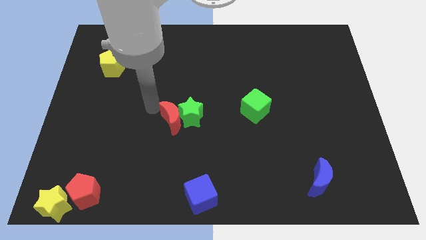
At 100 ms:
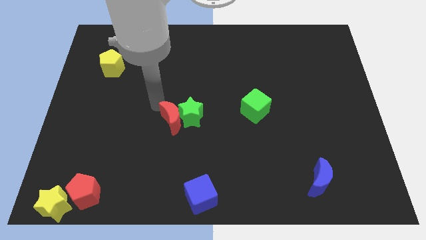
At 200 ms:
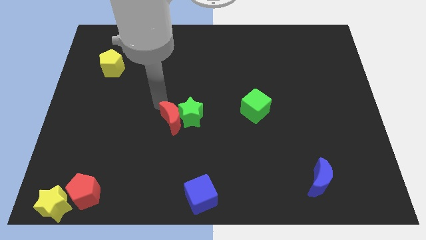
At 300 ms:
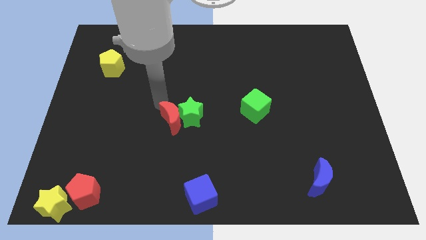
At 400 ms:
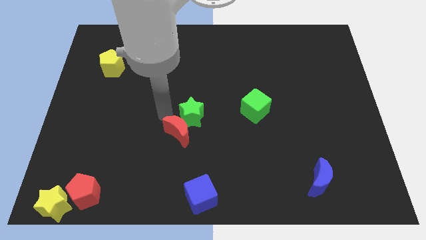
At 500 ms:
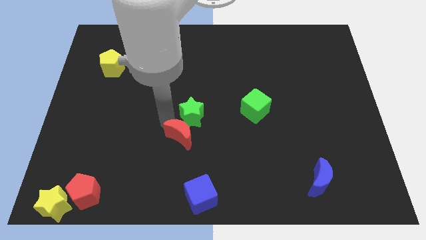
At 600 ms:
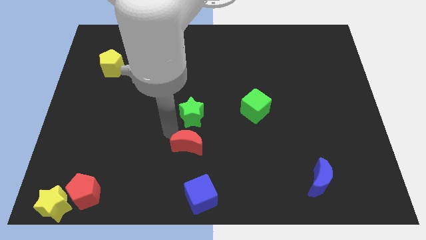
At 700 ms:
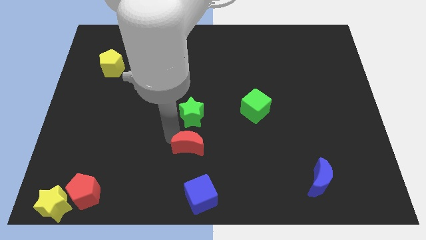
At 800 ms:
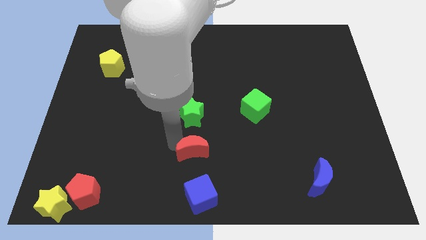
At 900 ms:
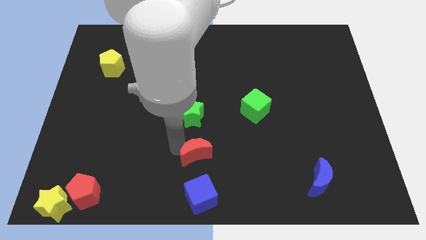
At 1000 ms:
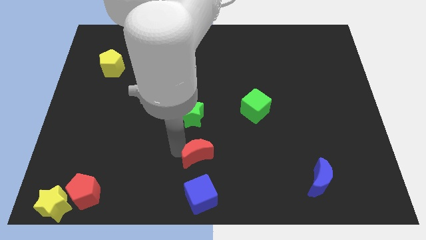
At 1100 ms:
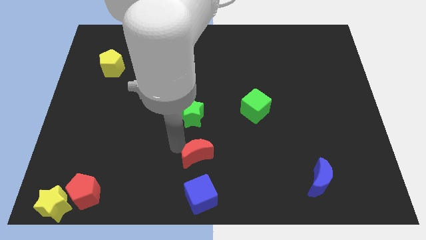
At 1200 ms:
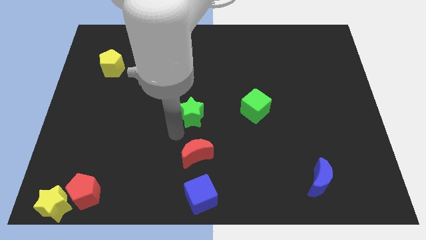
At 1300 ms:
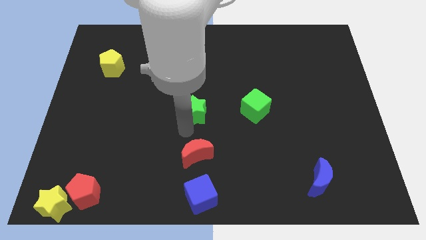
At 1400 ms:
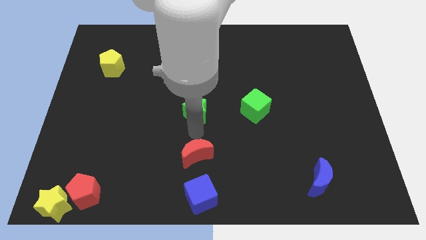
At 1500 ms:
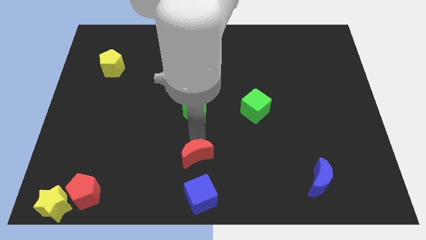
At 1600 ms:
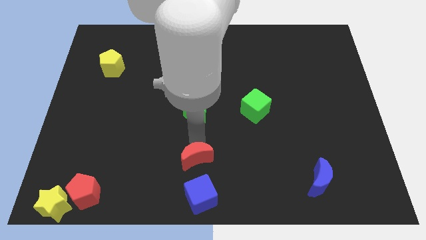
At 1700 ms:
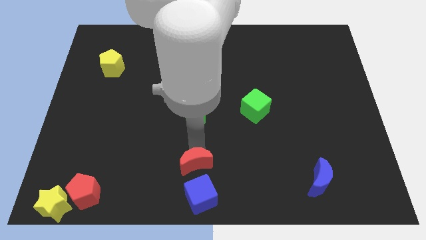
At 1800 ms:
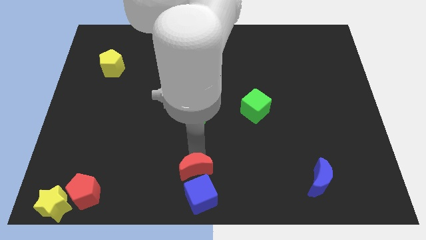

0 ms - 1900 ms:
place the red moon above the blue cube

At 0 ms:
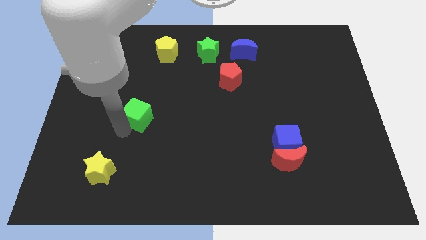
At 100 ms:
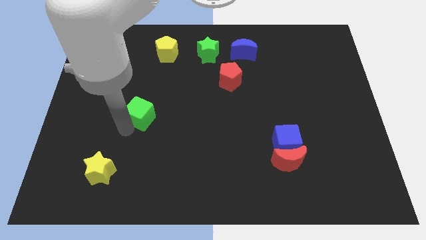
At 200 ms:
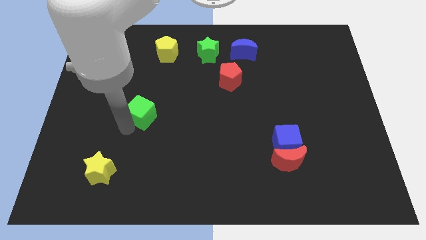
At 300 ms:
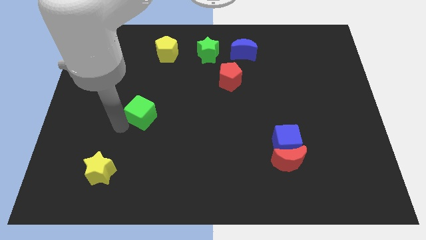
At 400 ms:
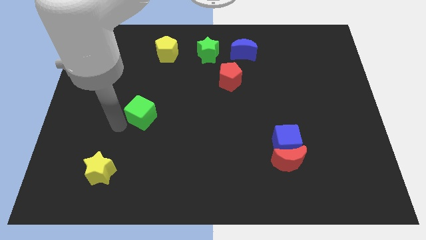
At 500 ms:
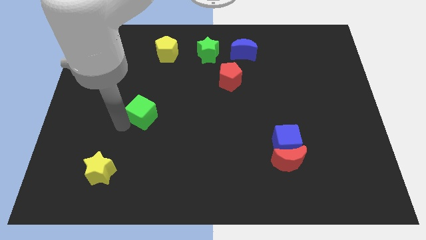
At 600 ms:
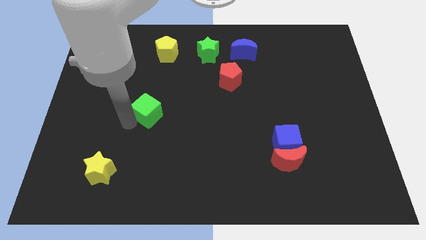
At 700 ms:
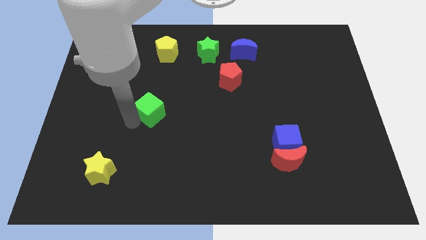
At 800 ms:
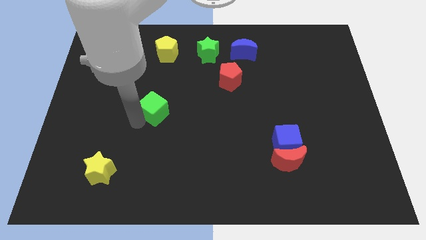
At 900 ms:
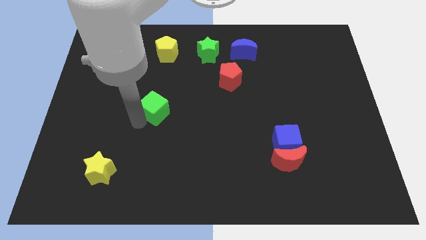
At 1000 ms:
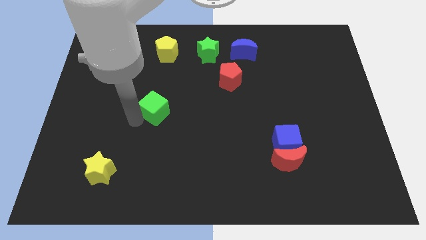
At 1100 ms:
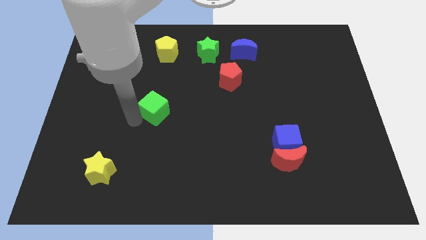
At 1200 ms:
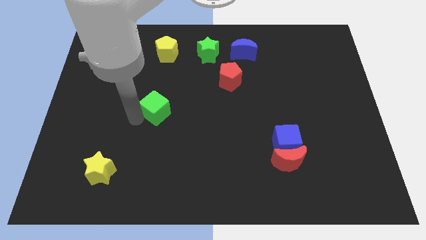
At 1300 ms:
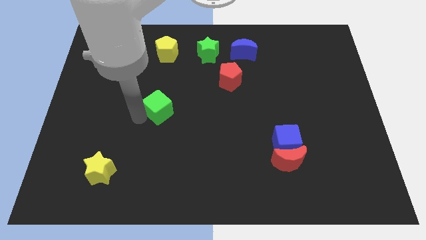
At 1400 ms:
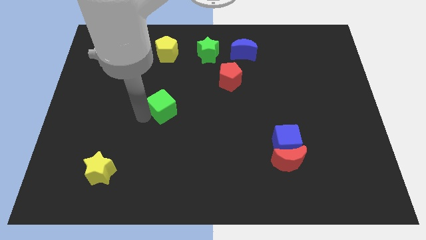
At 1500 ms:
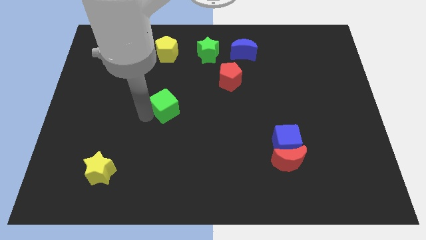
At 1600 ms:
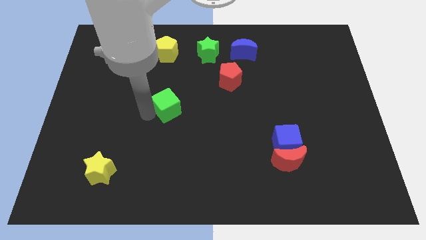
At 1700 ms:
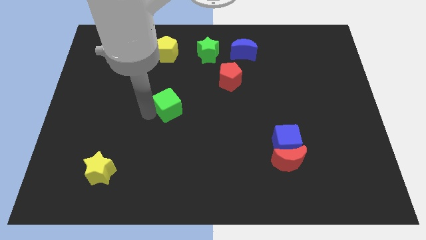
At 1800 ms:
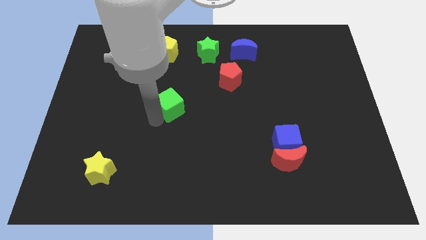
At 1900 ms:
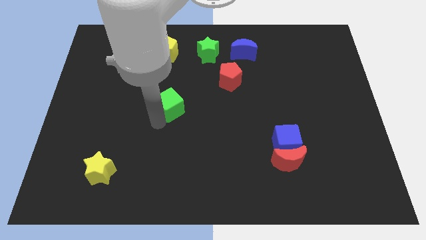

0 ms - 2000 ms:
move the green cube towards the red pentagon

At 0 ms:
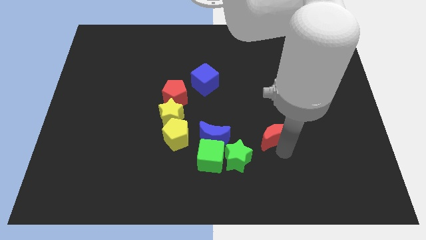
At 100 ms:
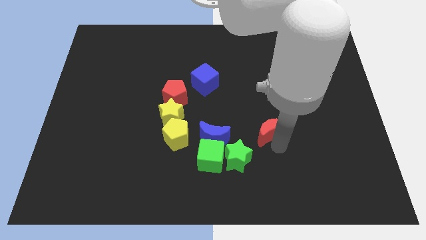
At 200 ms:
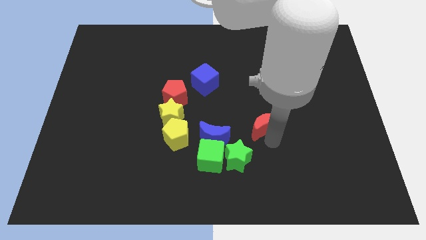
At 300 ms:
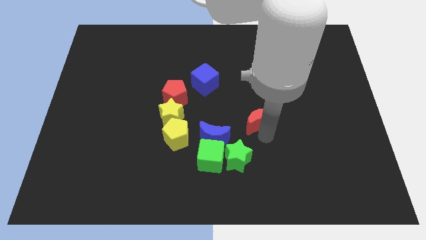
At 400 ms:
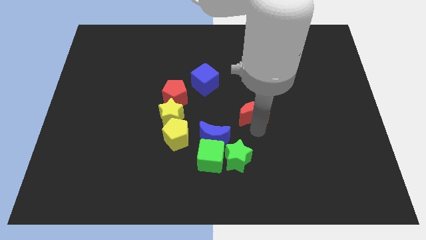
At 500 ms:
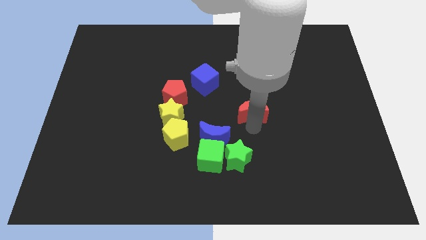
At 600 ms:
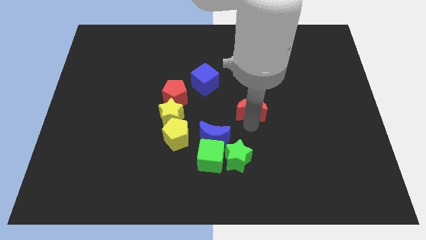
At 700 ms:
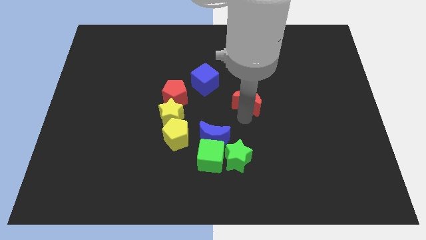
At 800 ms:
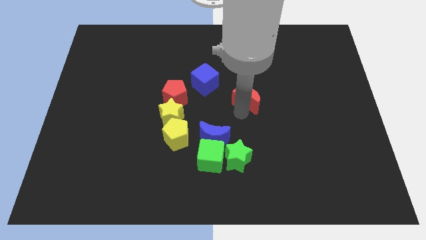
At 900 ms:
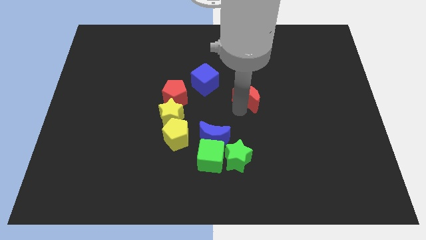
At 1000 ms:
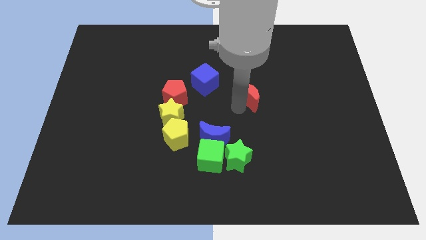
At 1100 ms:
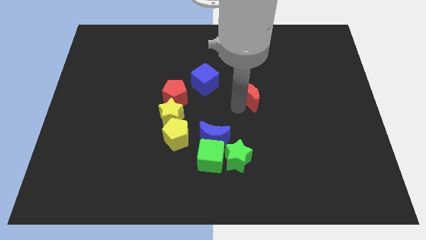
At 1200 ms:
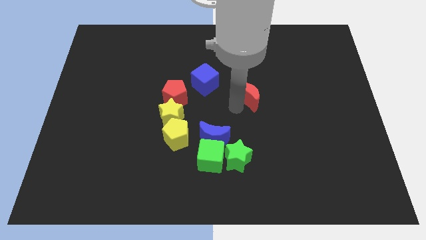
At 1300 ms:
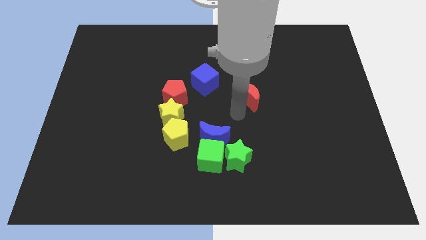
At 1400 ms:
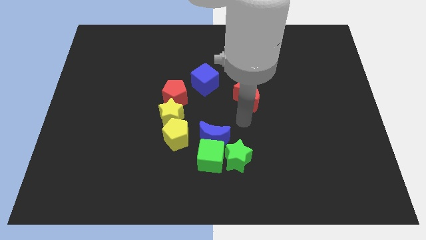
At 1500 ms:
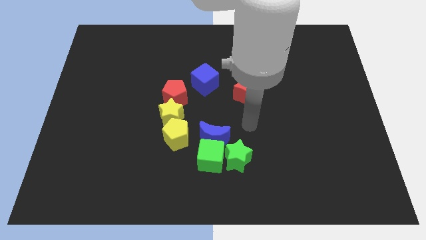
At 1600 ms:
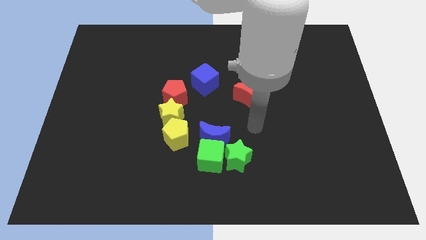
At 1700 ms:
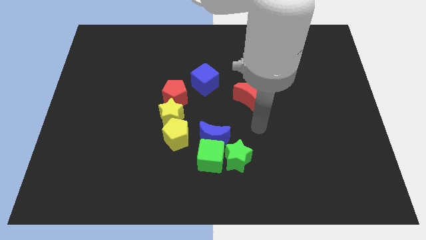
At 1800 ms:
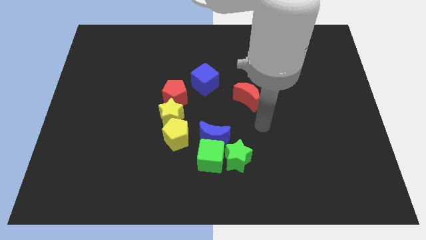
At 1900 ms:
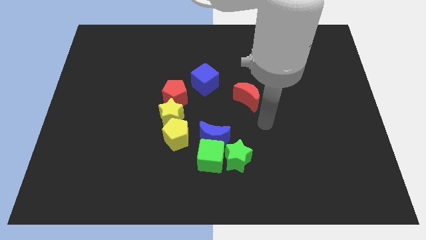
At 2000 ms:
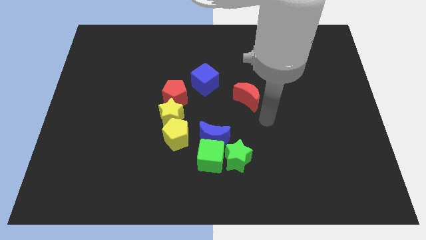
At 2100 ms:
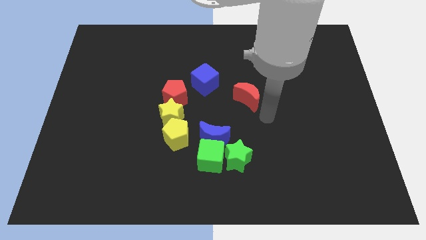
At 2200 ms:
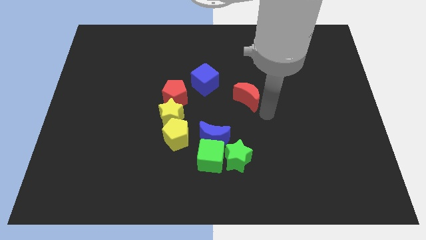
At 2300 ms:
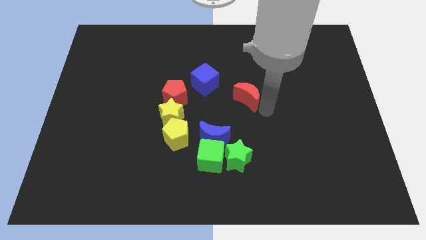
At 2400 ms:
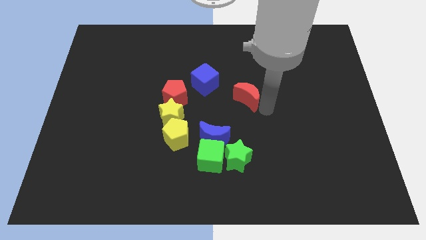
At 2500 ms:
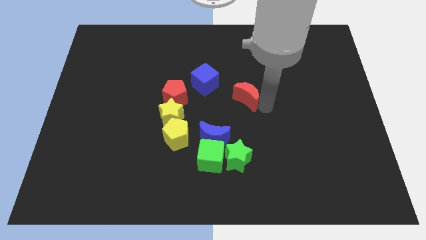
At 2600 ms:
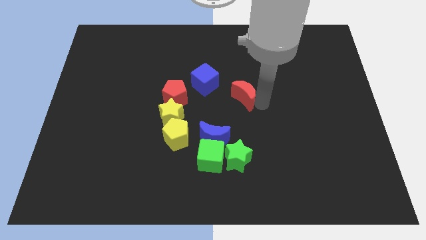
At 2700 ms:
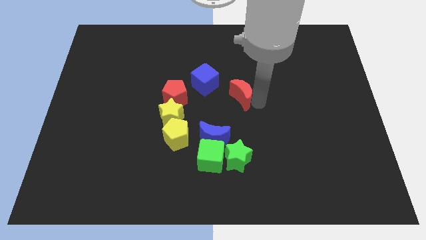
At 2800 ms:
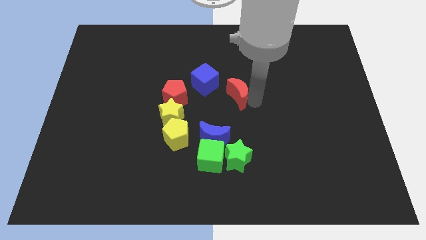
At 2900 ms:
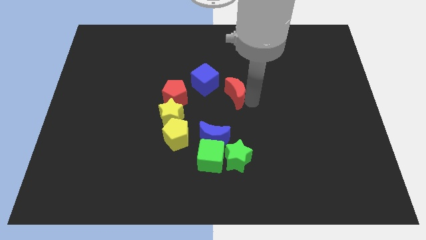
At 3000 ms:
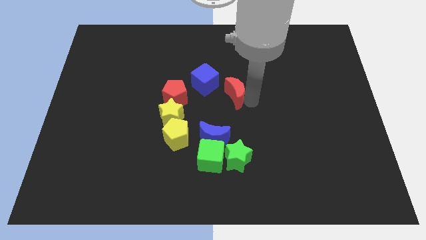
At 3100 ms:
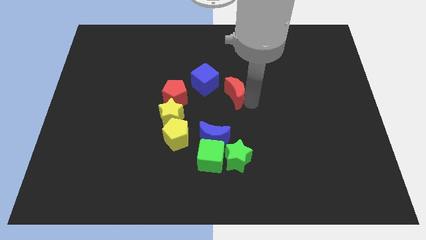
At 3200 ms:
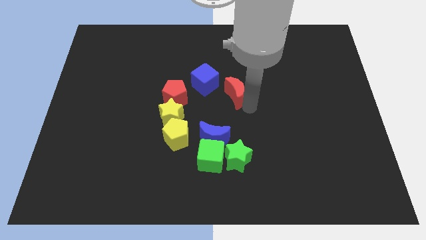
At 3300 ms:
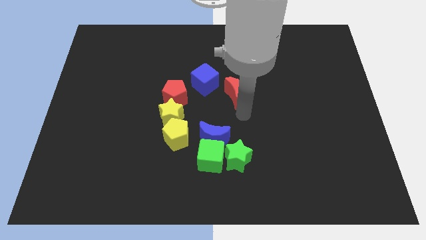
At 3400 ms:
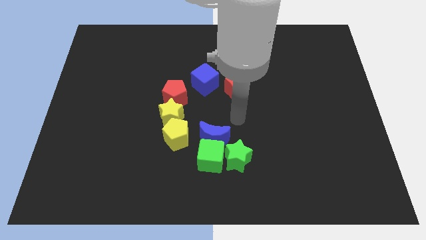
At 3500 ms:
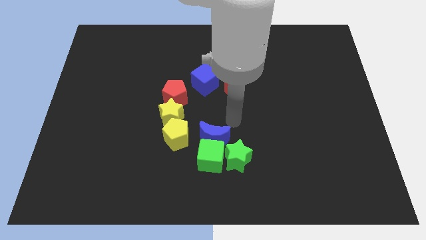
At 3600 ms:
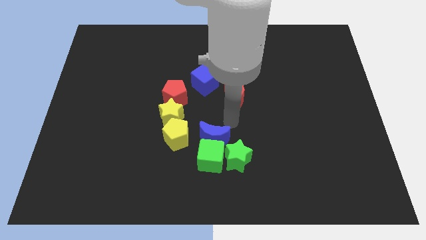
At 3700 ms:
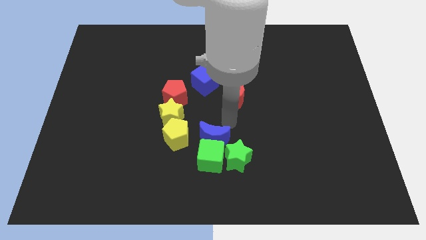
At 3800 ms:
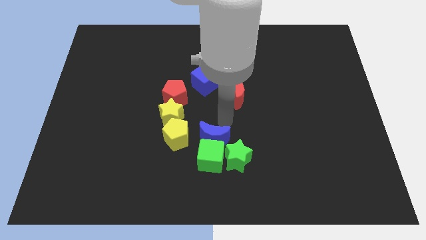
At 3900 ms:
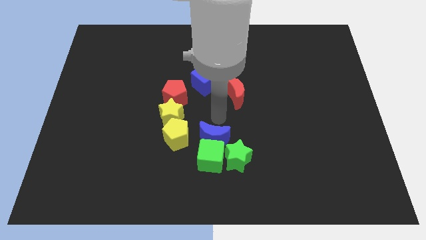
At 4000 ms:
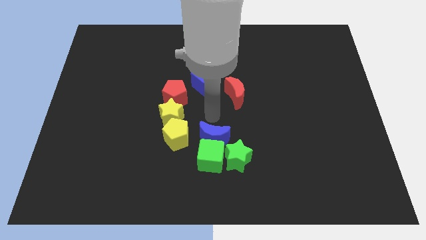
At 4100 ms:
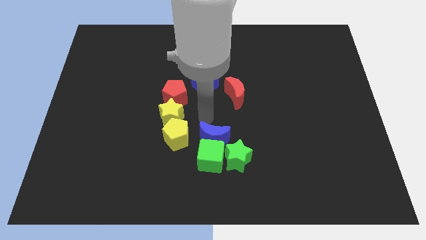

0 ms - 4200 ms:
push the red crescent towards blue cube

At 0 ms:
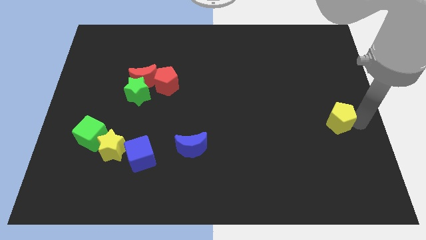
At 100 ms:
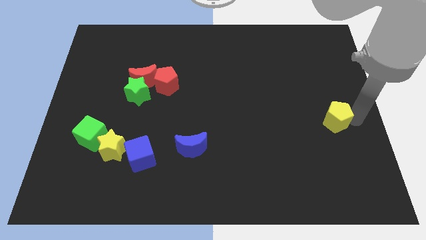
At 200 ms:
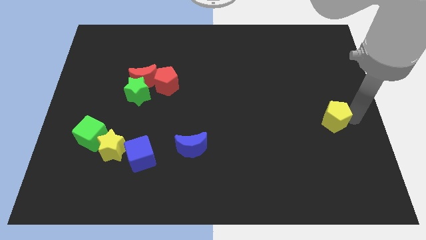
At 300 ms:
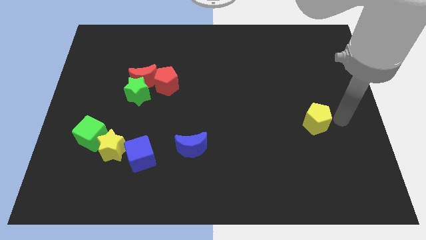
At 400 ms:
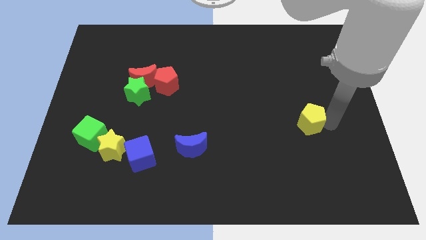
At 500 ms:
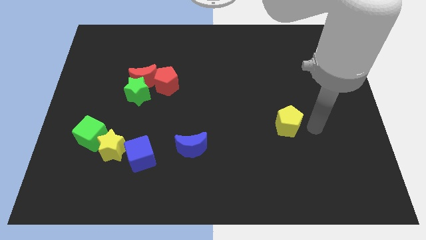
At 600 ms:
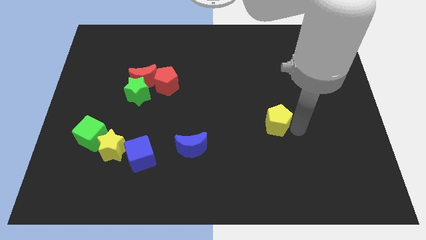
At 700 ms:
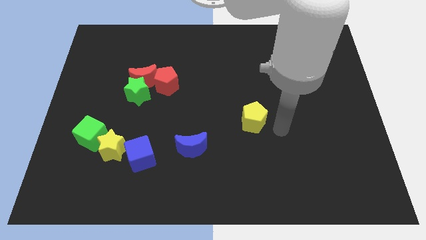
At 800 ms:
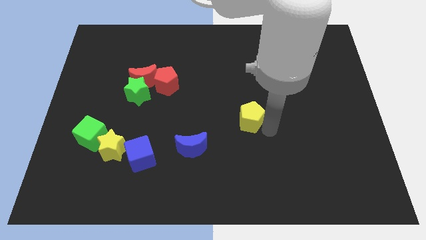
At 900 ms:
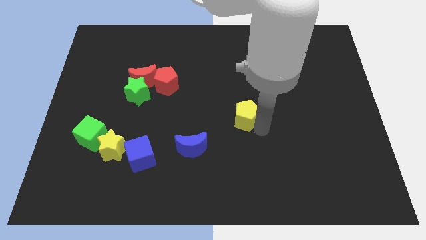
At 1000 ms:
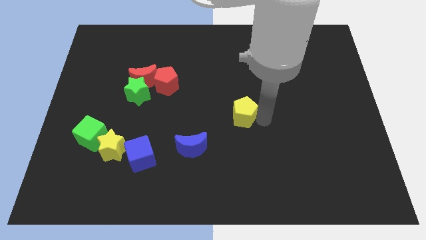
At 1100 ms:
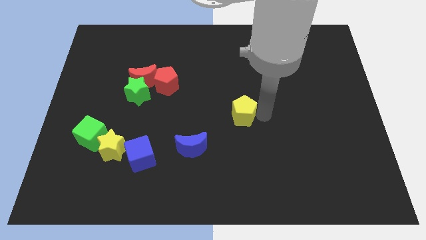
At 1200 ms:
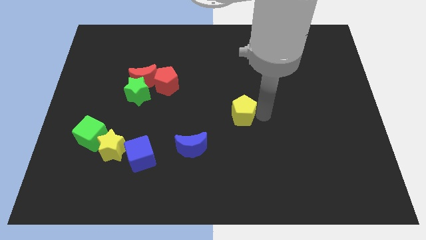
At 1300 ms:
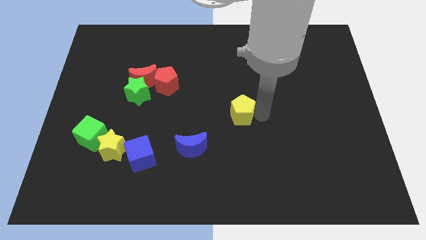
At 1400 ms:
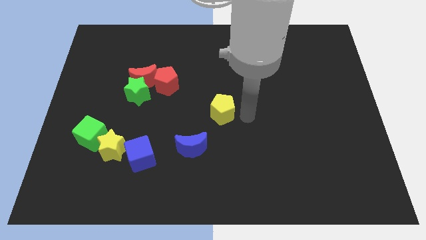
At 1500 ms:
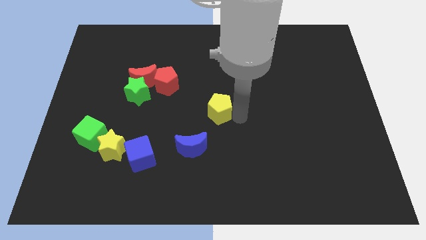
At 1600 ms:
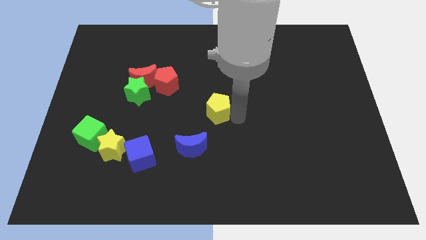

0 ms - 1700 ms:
push the yellow pentagon towards the center of the board
